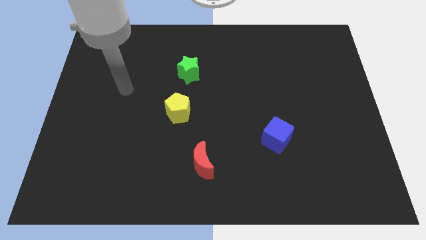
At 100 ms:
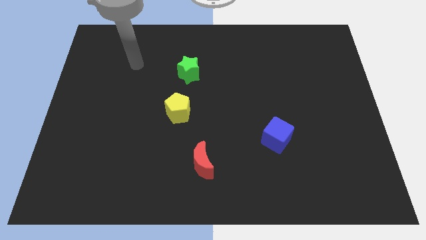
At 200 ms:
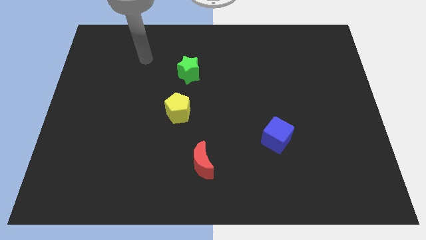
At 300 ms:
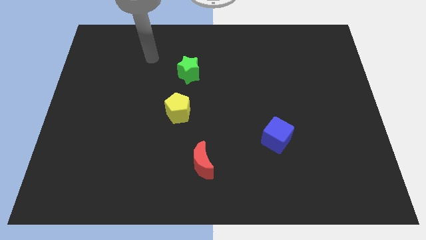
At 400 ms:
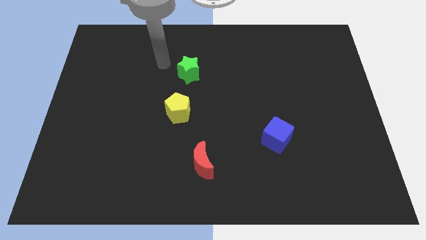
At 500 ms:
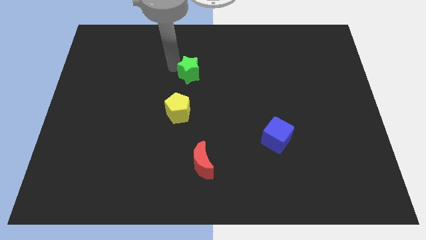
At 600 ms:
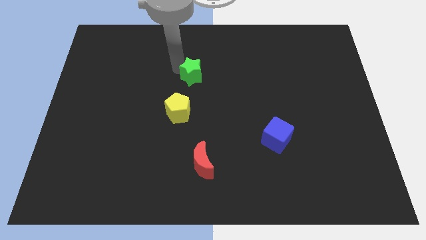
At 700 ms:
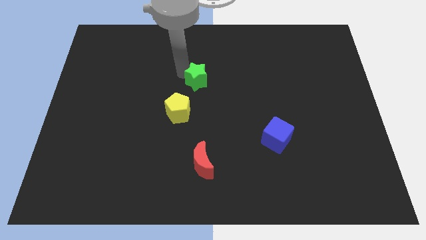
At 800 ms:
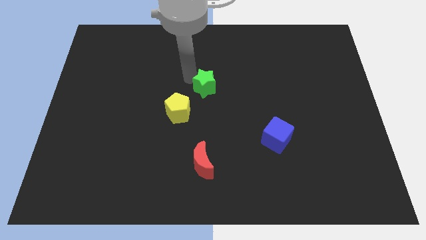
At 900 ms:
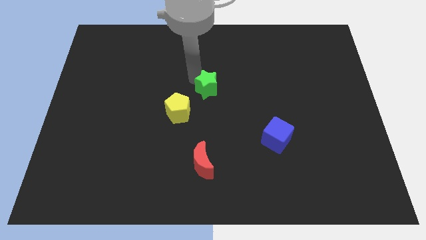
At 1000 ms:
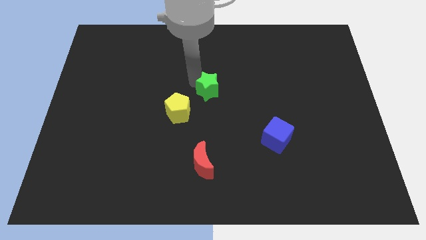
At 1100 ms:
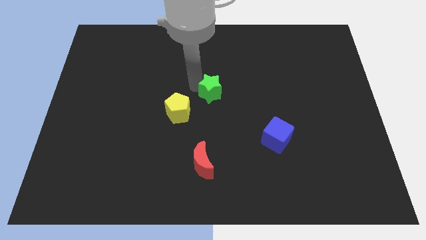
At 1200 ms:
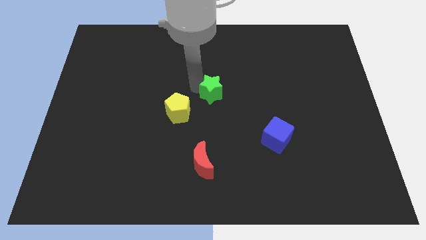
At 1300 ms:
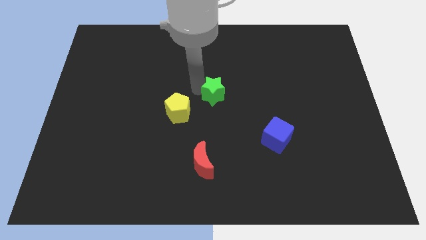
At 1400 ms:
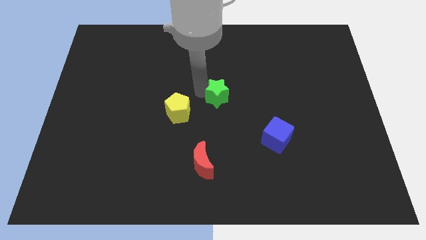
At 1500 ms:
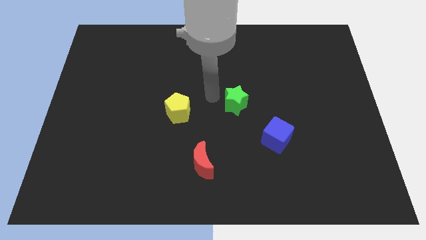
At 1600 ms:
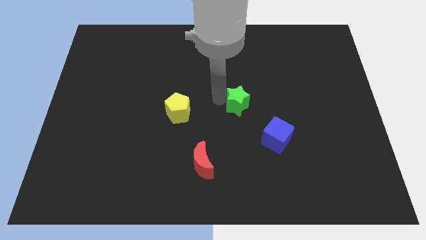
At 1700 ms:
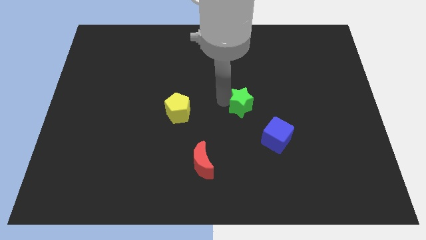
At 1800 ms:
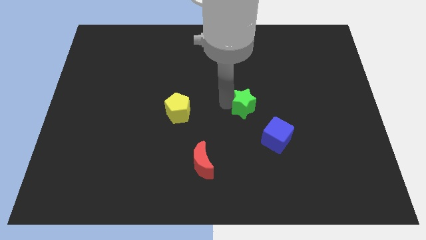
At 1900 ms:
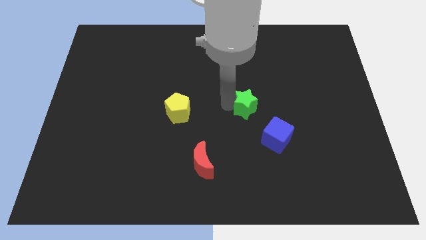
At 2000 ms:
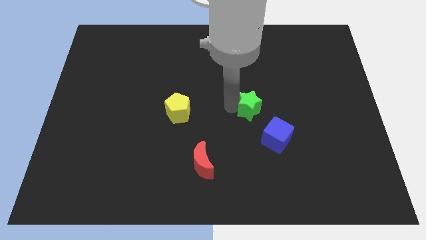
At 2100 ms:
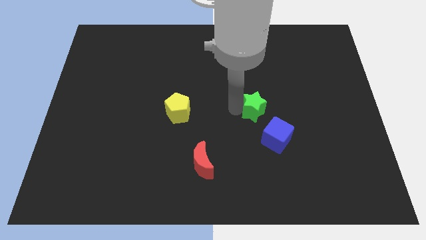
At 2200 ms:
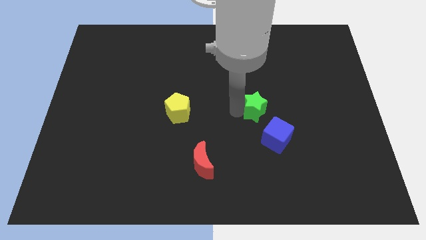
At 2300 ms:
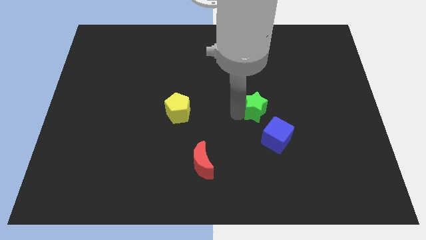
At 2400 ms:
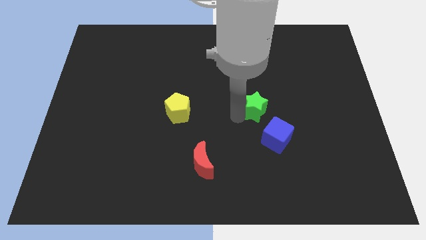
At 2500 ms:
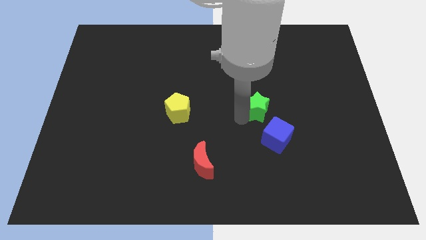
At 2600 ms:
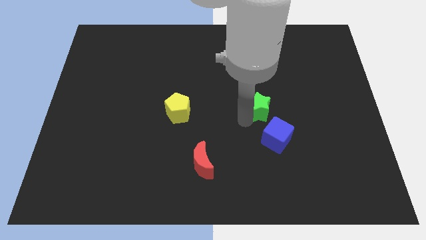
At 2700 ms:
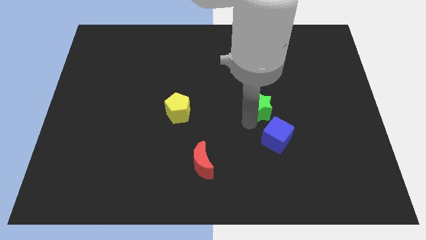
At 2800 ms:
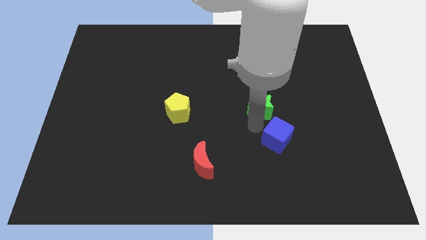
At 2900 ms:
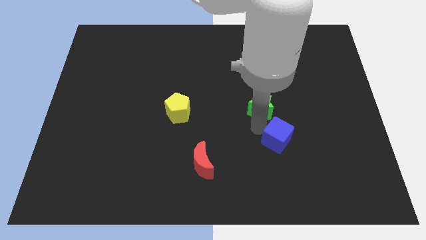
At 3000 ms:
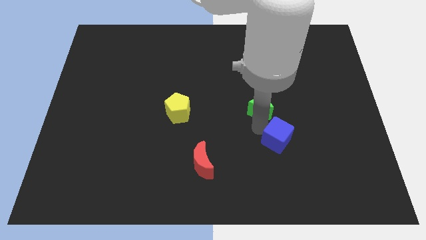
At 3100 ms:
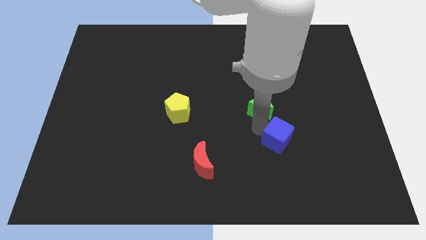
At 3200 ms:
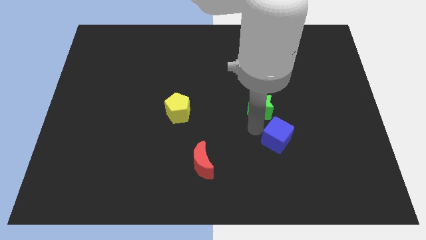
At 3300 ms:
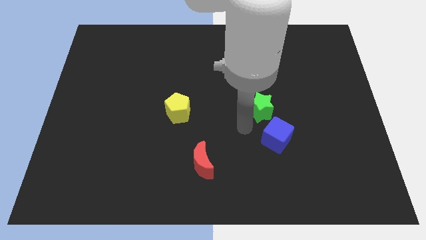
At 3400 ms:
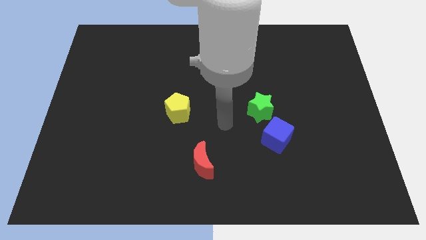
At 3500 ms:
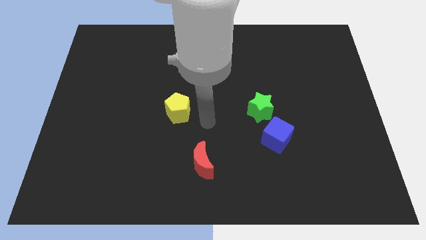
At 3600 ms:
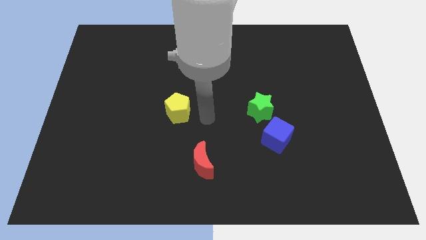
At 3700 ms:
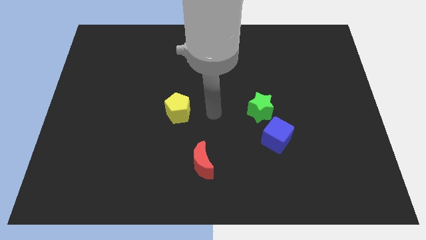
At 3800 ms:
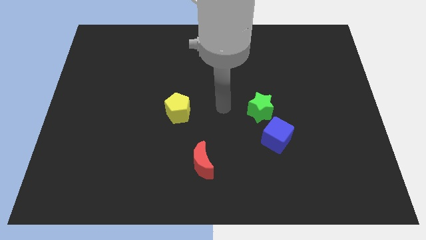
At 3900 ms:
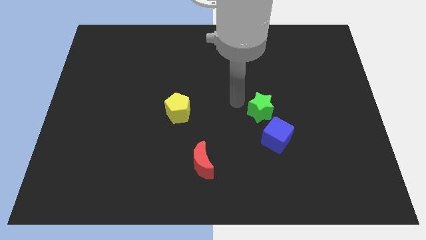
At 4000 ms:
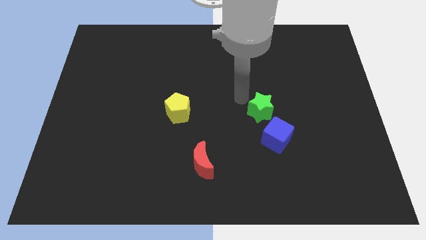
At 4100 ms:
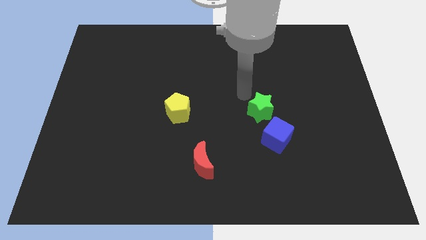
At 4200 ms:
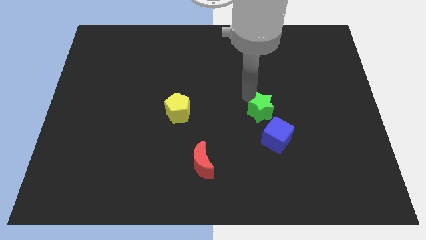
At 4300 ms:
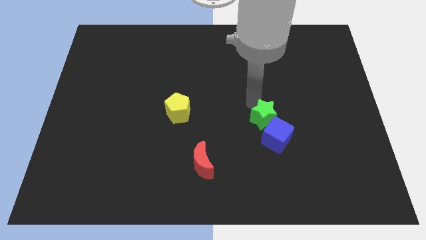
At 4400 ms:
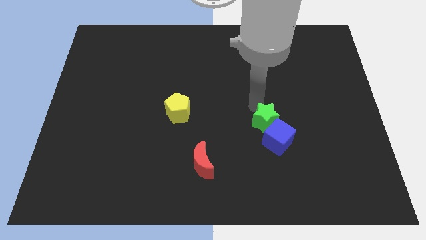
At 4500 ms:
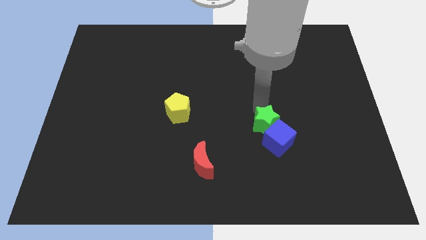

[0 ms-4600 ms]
push the star to the cube

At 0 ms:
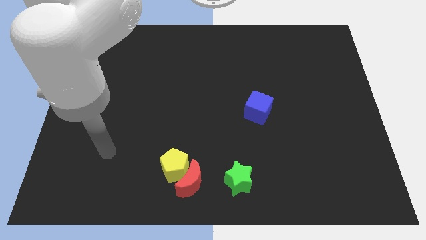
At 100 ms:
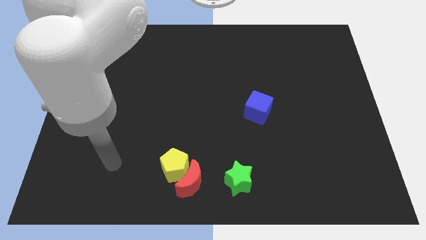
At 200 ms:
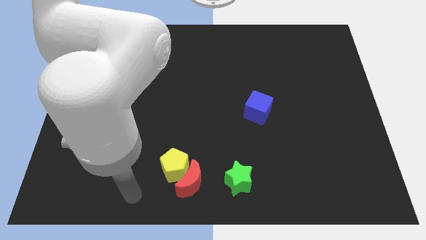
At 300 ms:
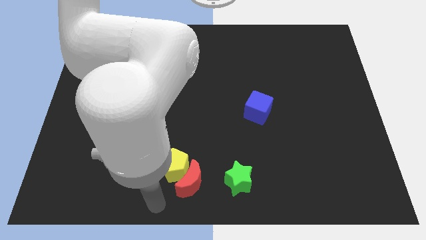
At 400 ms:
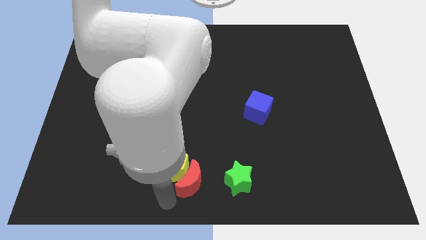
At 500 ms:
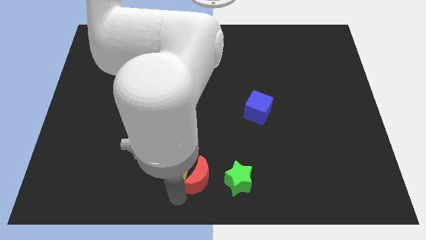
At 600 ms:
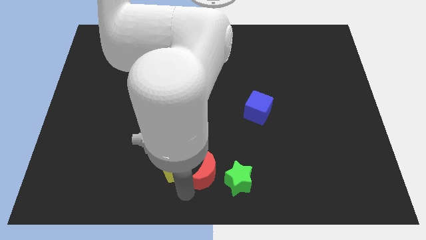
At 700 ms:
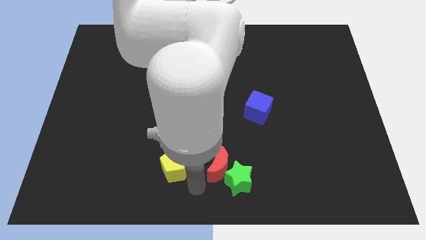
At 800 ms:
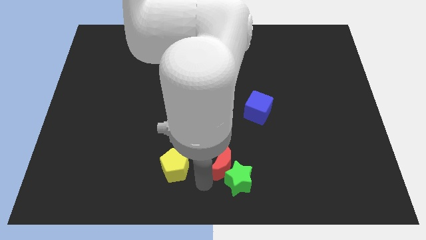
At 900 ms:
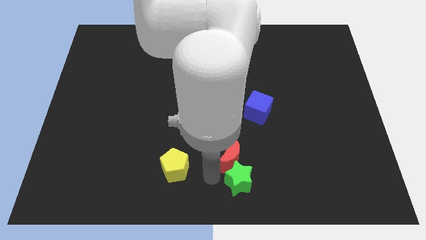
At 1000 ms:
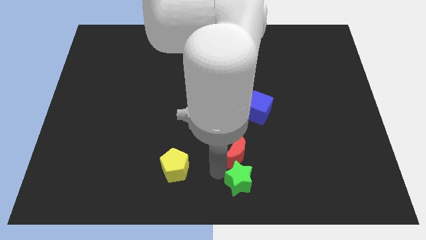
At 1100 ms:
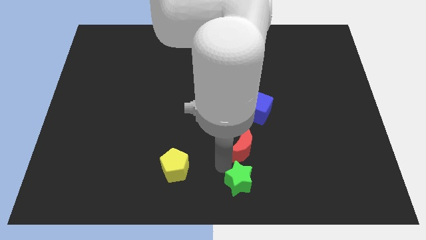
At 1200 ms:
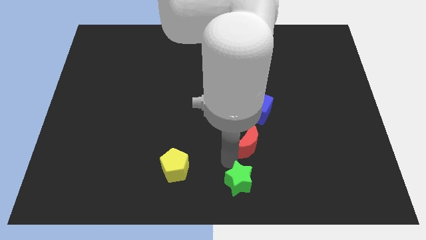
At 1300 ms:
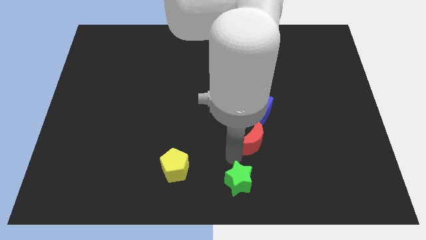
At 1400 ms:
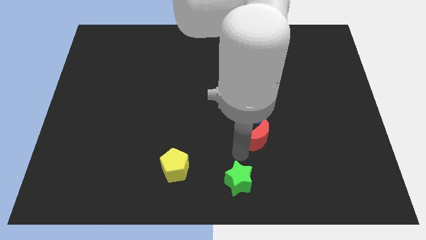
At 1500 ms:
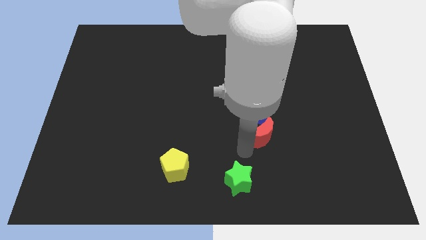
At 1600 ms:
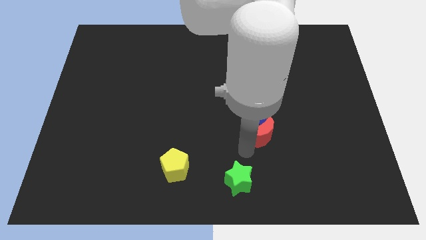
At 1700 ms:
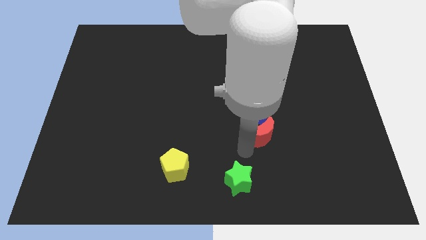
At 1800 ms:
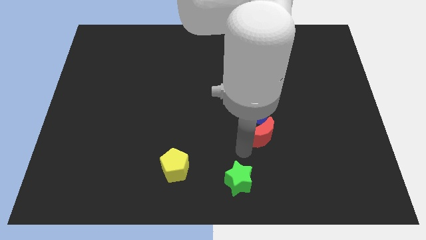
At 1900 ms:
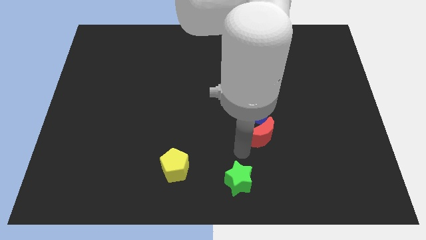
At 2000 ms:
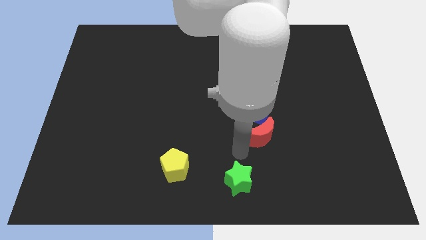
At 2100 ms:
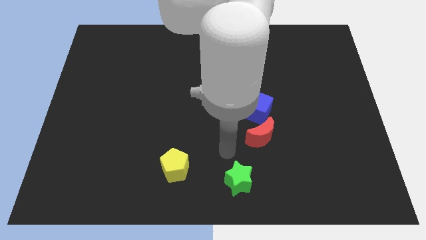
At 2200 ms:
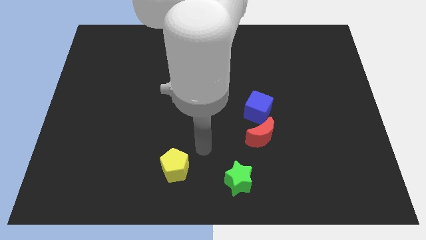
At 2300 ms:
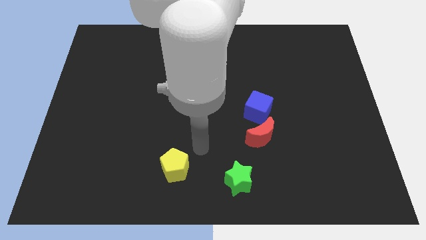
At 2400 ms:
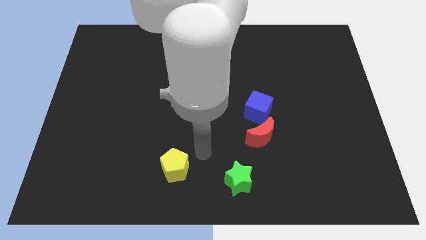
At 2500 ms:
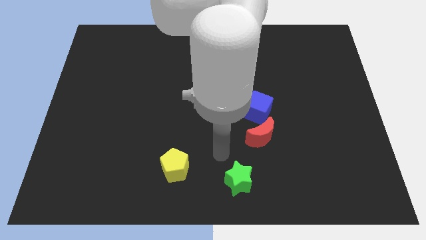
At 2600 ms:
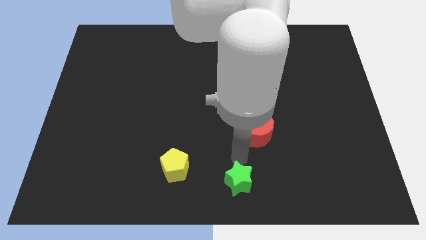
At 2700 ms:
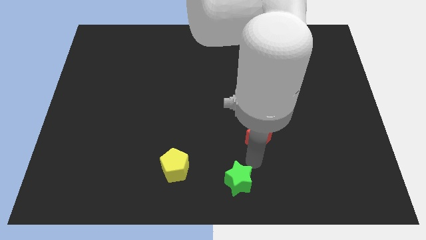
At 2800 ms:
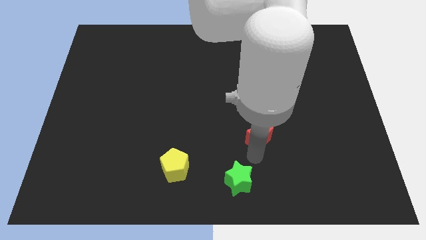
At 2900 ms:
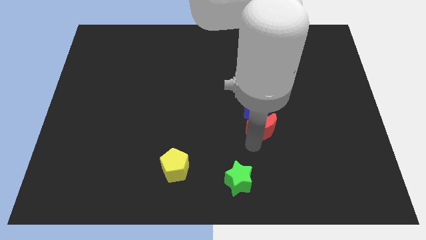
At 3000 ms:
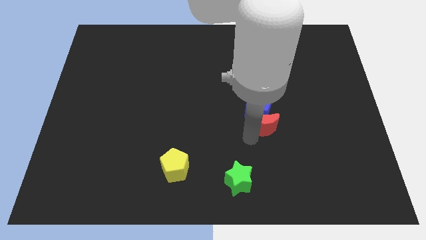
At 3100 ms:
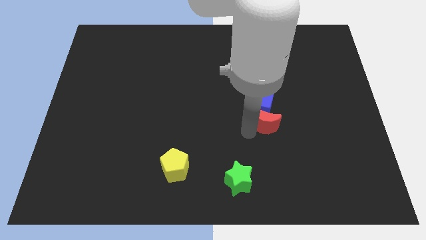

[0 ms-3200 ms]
push the red moon next to the cube

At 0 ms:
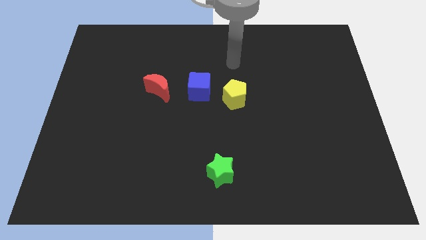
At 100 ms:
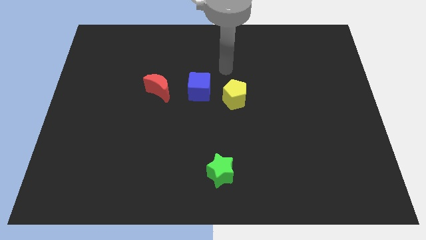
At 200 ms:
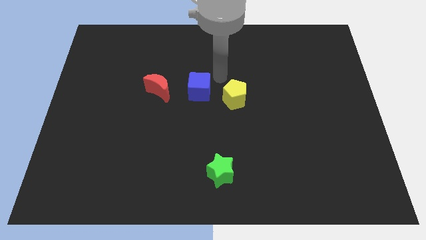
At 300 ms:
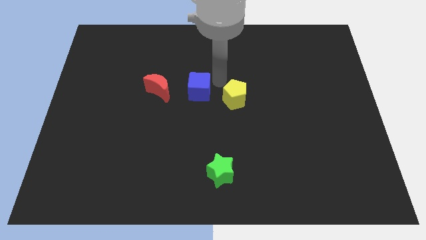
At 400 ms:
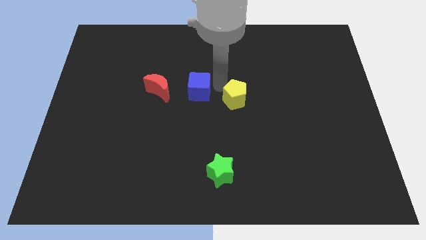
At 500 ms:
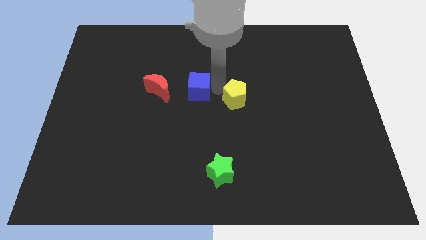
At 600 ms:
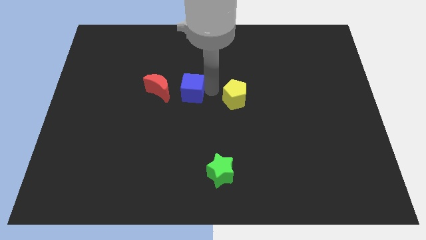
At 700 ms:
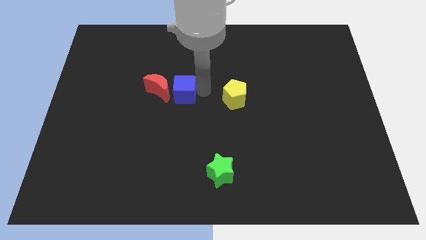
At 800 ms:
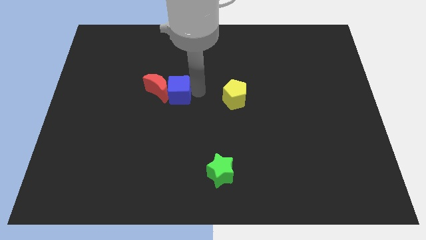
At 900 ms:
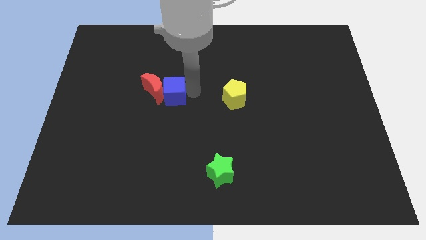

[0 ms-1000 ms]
move the cube towards the red block
